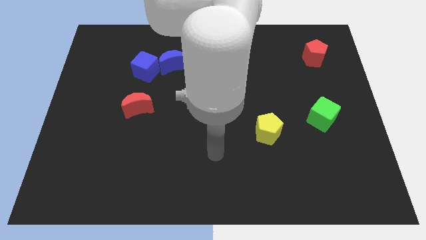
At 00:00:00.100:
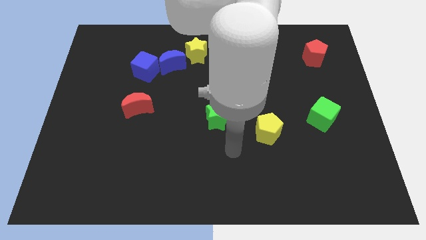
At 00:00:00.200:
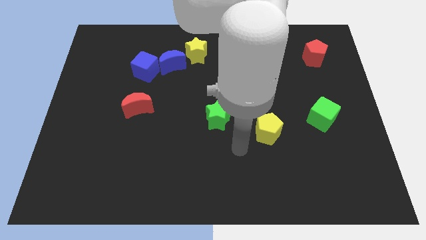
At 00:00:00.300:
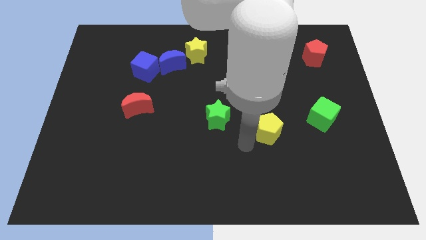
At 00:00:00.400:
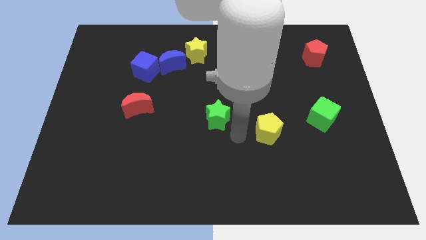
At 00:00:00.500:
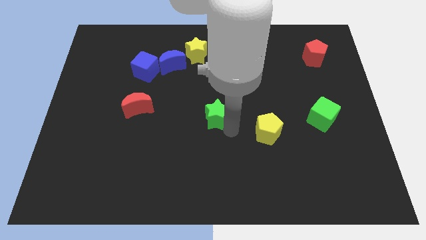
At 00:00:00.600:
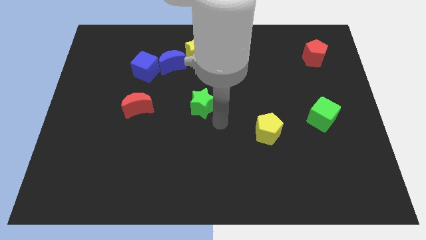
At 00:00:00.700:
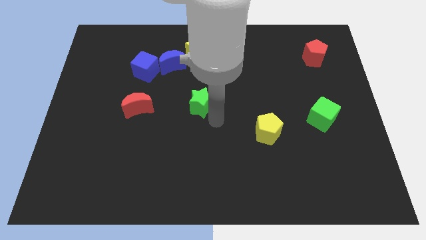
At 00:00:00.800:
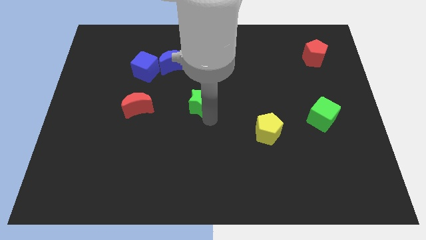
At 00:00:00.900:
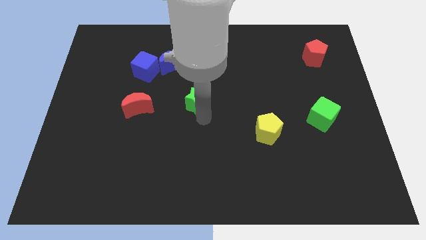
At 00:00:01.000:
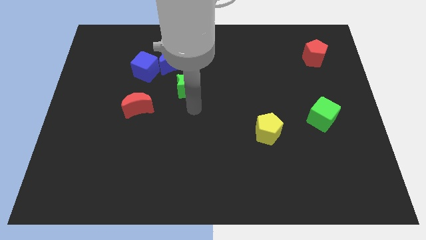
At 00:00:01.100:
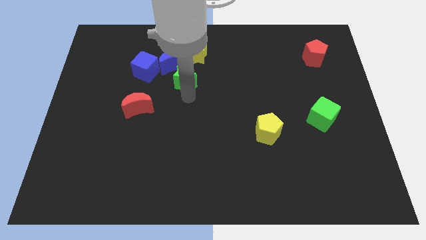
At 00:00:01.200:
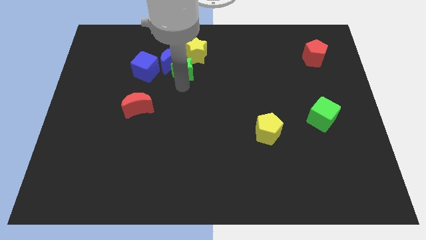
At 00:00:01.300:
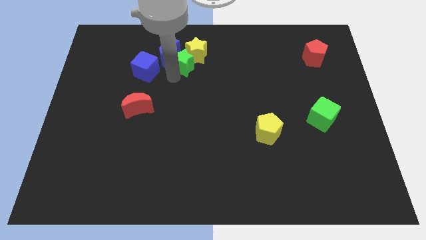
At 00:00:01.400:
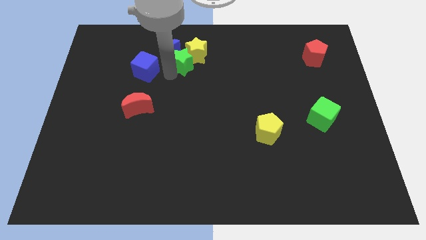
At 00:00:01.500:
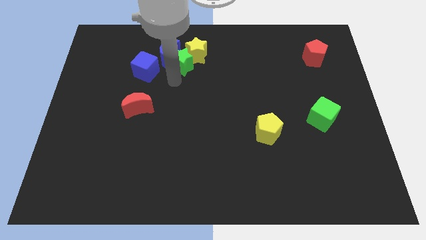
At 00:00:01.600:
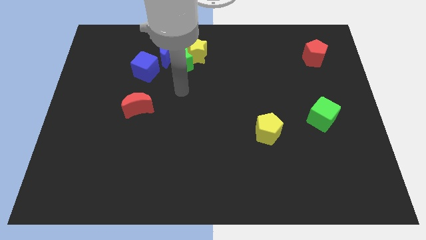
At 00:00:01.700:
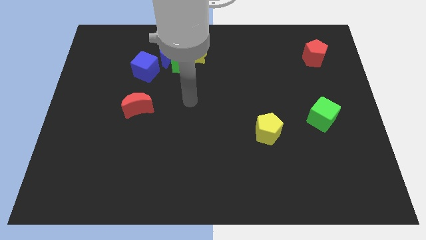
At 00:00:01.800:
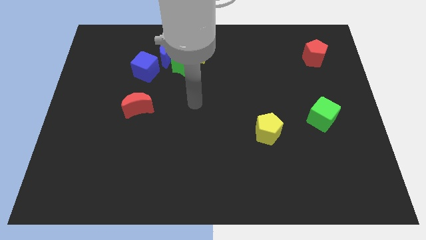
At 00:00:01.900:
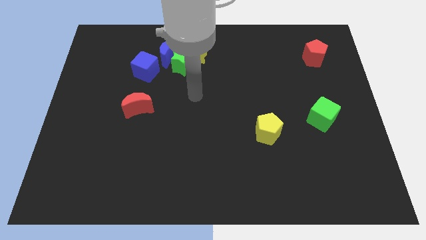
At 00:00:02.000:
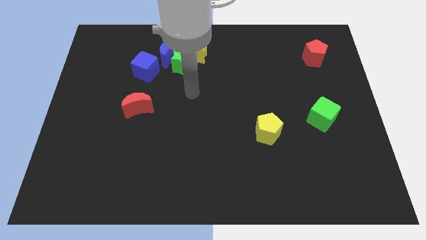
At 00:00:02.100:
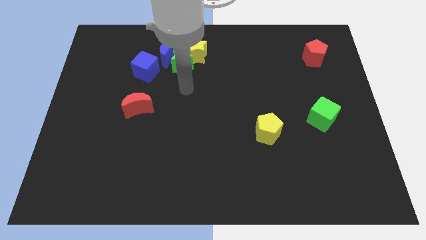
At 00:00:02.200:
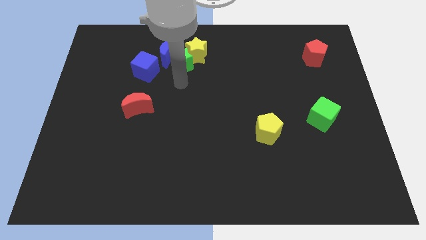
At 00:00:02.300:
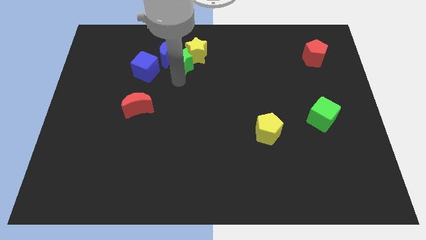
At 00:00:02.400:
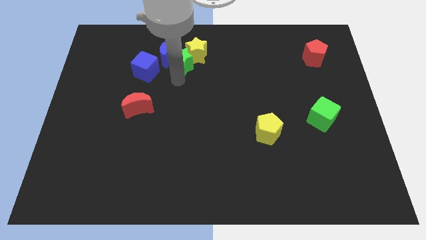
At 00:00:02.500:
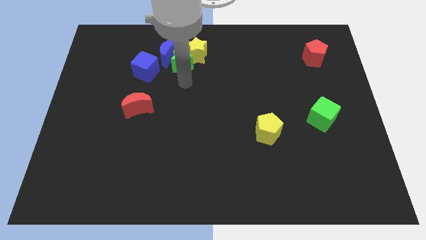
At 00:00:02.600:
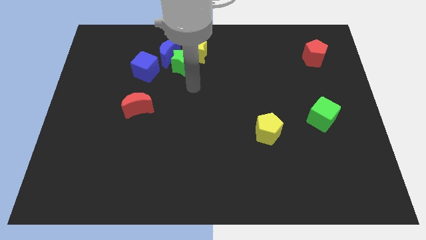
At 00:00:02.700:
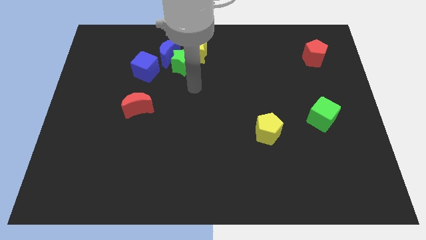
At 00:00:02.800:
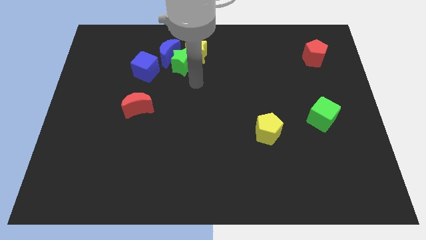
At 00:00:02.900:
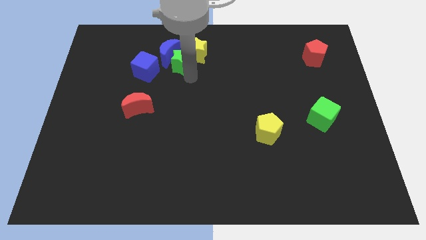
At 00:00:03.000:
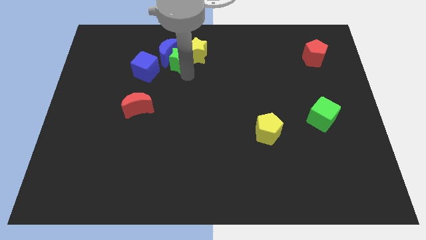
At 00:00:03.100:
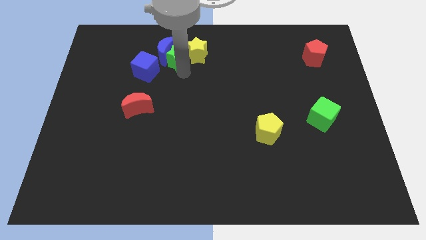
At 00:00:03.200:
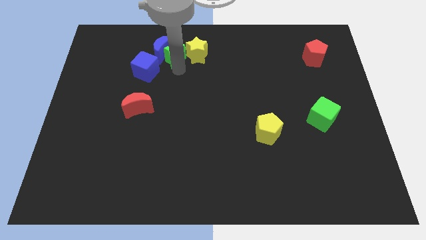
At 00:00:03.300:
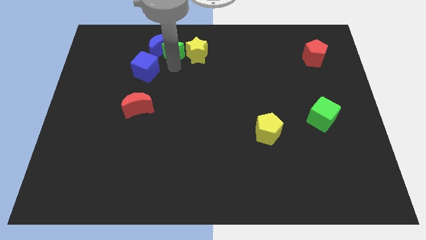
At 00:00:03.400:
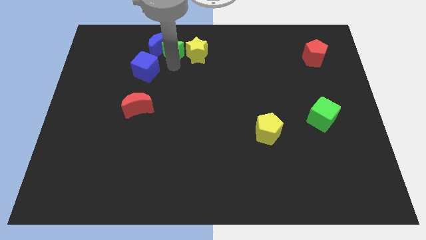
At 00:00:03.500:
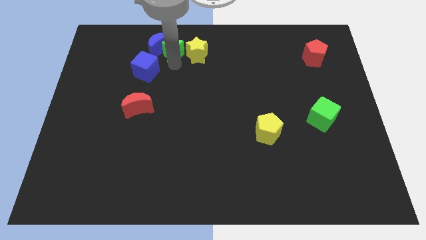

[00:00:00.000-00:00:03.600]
place green star to the left of yellow star

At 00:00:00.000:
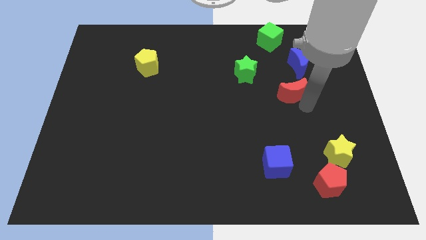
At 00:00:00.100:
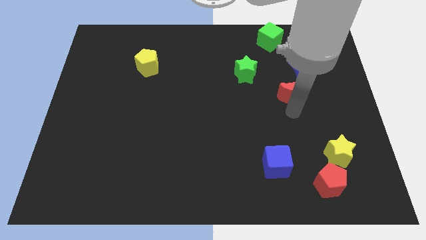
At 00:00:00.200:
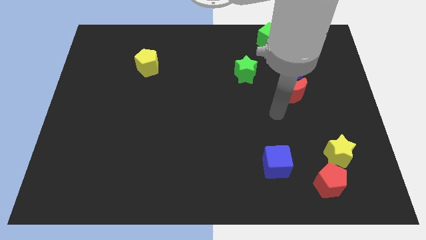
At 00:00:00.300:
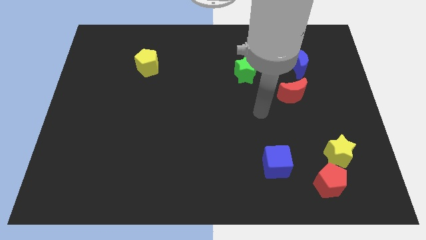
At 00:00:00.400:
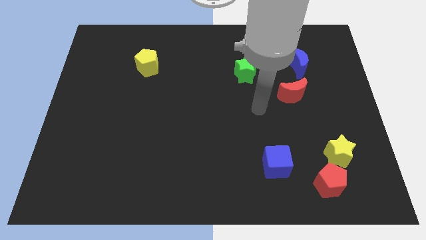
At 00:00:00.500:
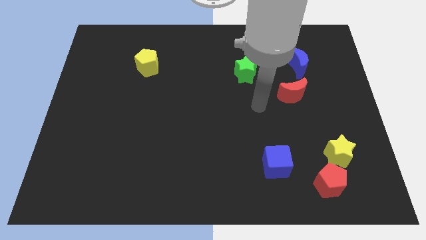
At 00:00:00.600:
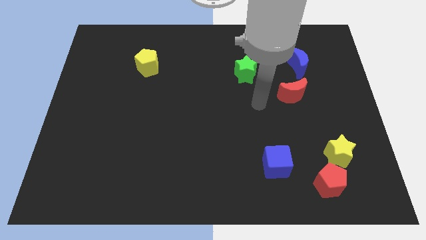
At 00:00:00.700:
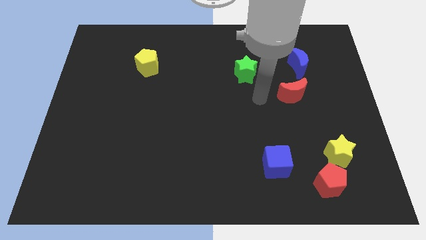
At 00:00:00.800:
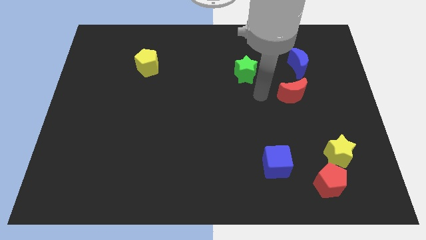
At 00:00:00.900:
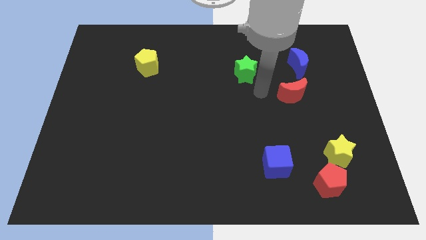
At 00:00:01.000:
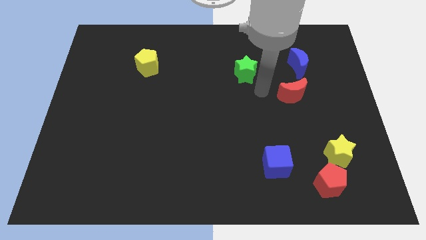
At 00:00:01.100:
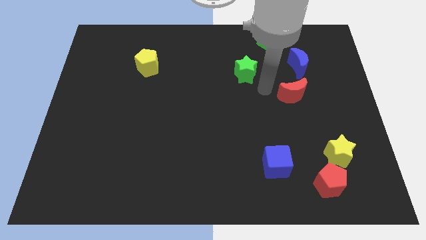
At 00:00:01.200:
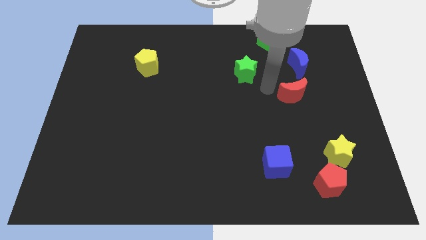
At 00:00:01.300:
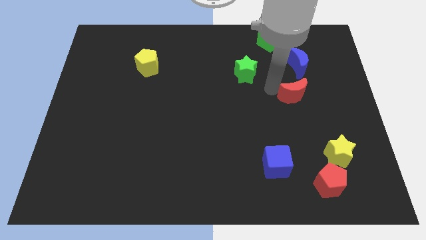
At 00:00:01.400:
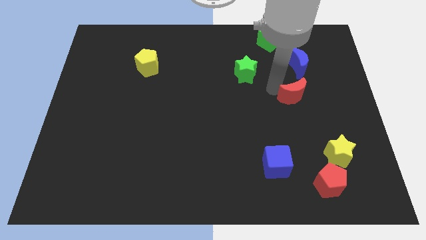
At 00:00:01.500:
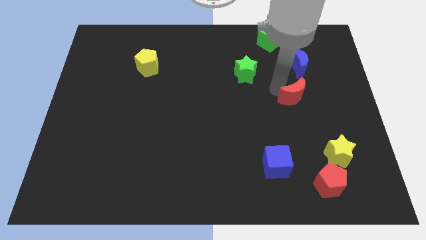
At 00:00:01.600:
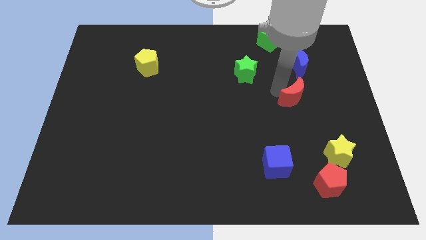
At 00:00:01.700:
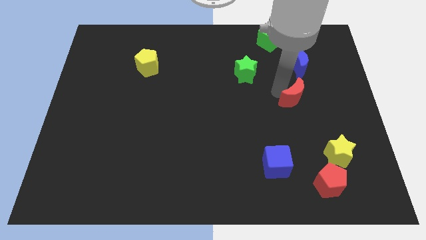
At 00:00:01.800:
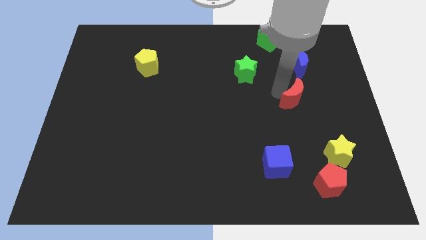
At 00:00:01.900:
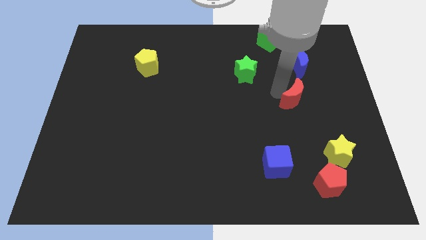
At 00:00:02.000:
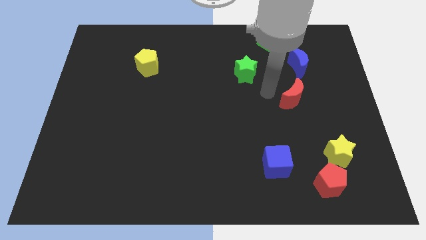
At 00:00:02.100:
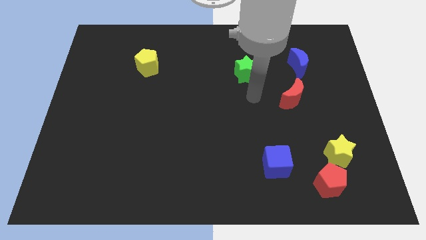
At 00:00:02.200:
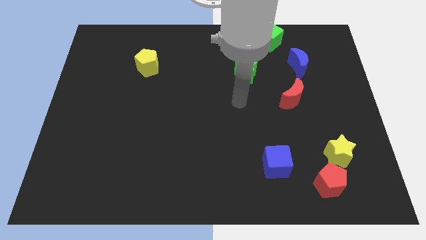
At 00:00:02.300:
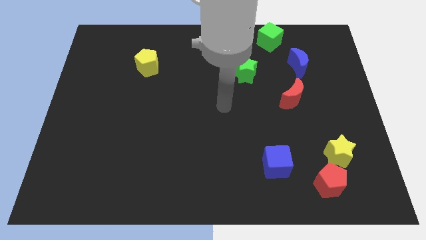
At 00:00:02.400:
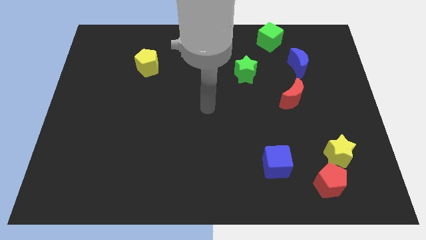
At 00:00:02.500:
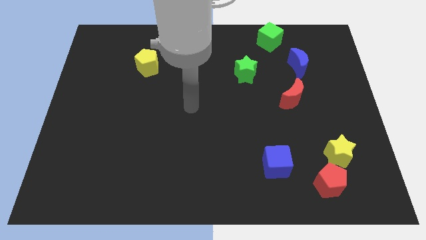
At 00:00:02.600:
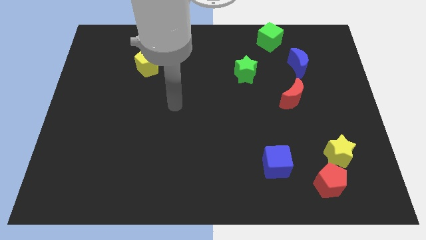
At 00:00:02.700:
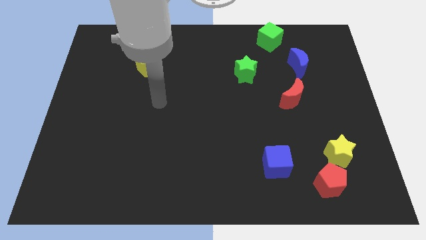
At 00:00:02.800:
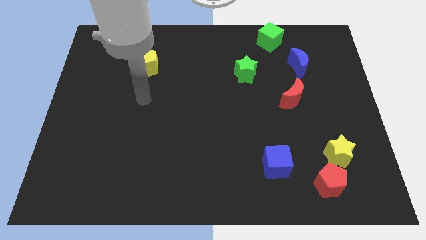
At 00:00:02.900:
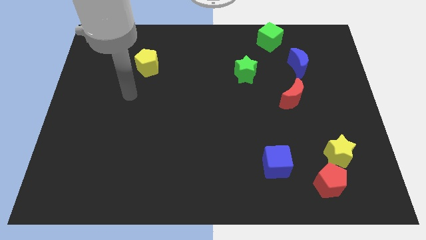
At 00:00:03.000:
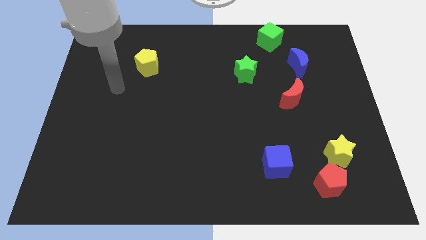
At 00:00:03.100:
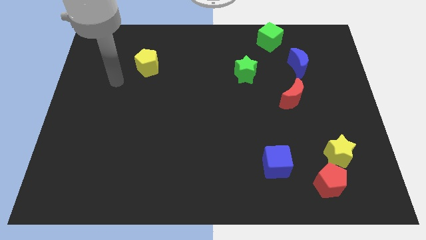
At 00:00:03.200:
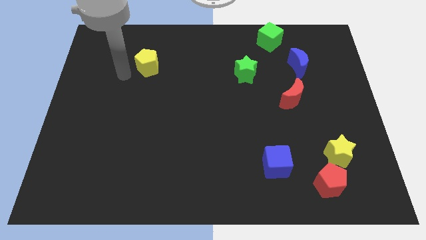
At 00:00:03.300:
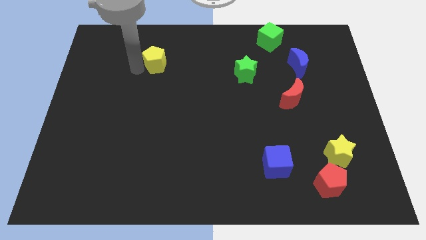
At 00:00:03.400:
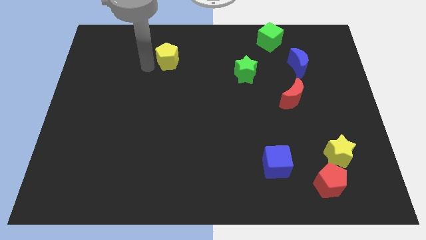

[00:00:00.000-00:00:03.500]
move the arm horizontally towards the center left

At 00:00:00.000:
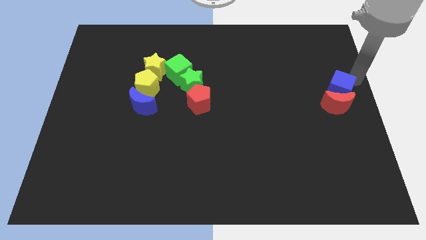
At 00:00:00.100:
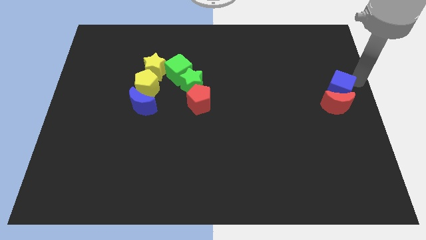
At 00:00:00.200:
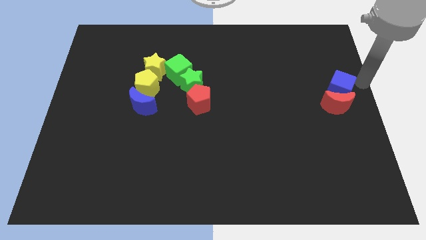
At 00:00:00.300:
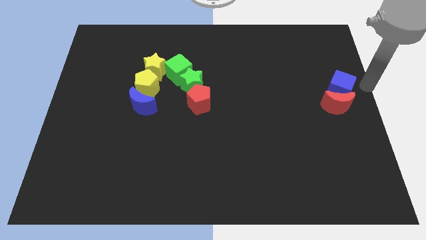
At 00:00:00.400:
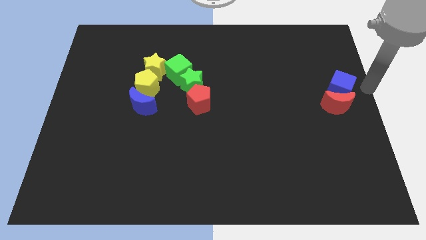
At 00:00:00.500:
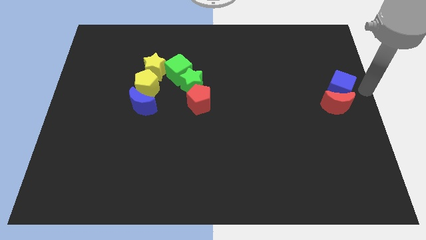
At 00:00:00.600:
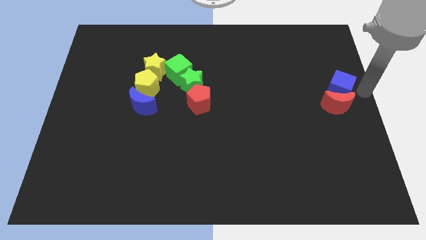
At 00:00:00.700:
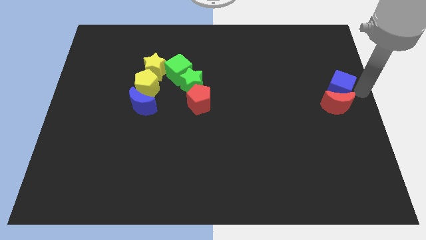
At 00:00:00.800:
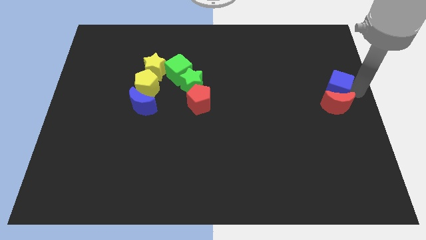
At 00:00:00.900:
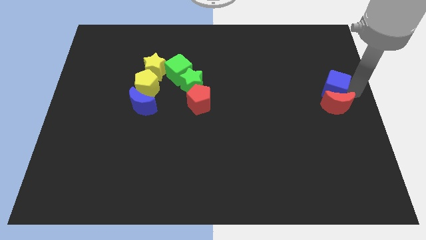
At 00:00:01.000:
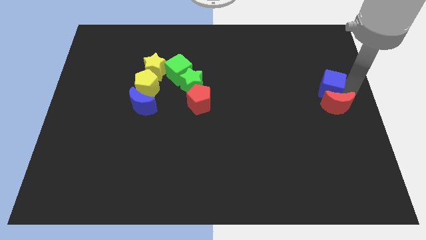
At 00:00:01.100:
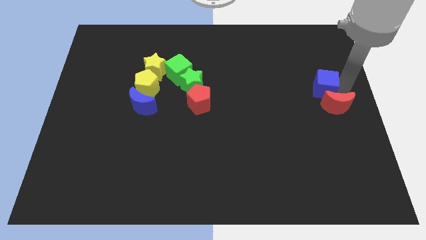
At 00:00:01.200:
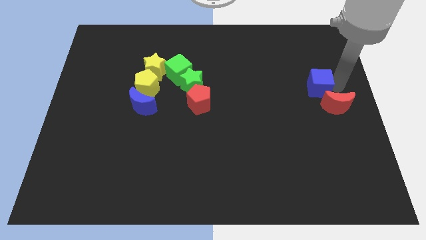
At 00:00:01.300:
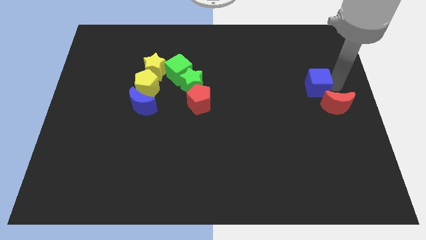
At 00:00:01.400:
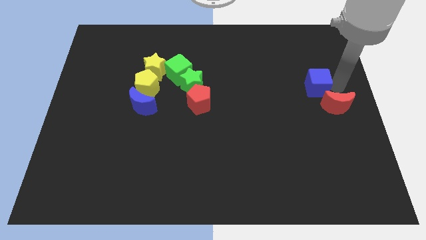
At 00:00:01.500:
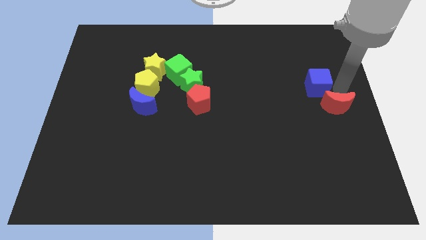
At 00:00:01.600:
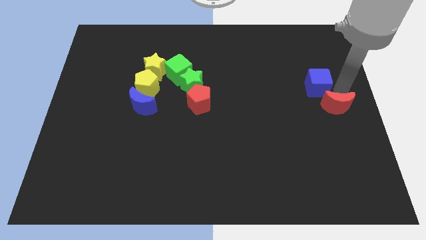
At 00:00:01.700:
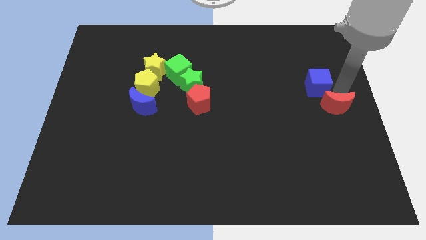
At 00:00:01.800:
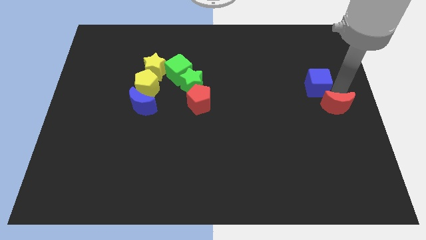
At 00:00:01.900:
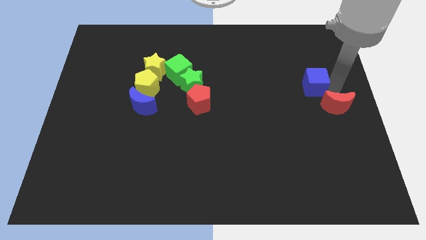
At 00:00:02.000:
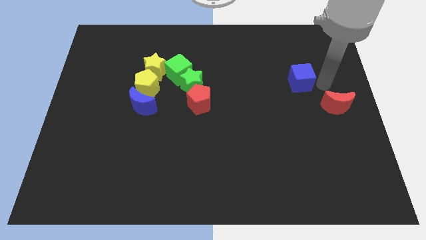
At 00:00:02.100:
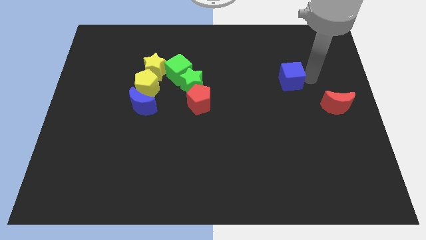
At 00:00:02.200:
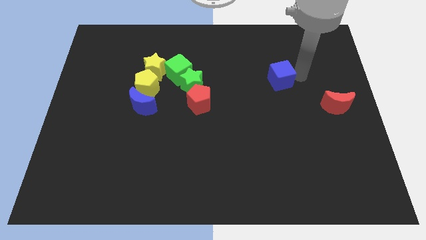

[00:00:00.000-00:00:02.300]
move the blue cube away from the red crescent to the left side
